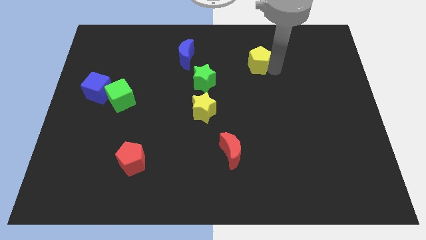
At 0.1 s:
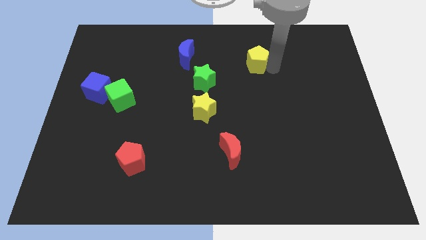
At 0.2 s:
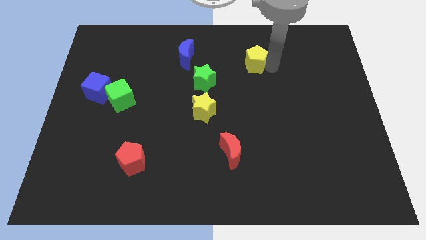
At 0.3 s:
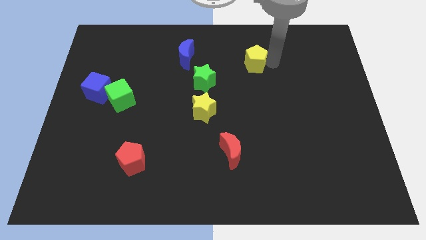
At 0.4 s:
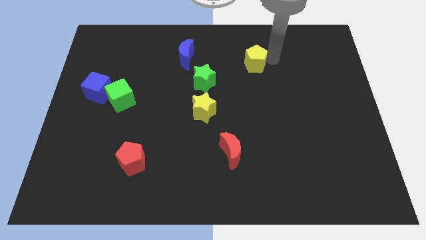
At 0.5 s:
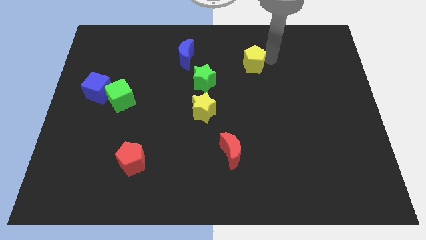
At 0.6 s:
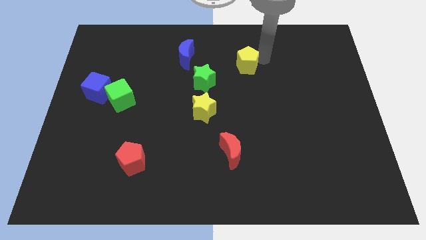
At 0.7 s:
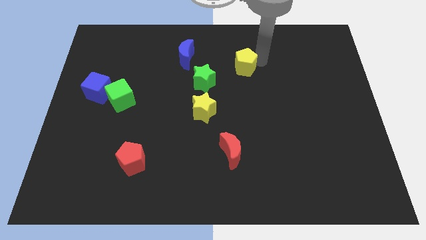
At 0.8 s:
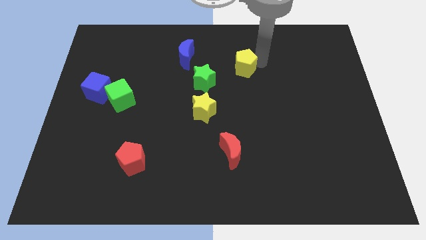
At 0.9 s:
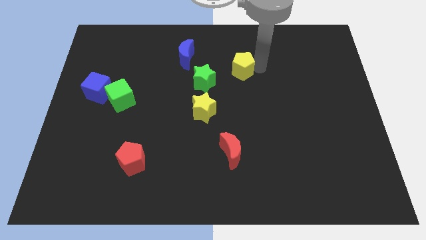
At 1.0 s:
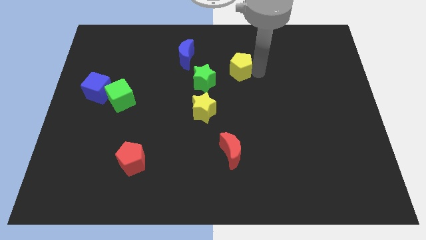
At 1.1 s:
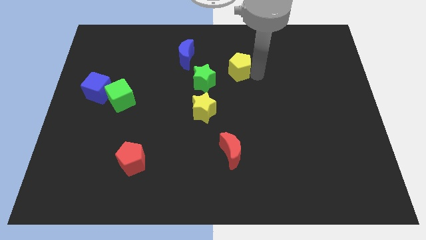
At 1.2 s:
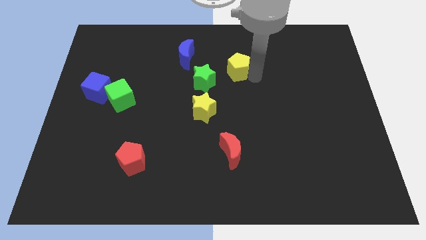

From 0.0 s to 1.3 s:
place yellow pentagon to the top right of green star

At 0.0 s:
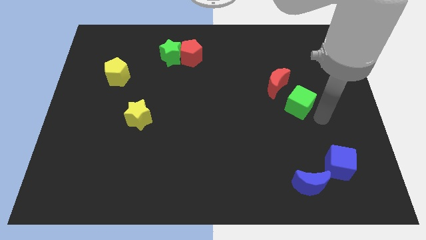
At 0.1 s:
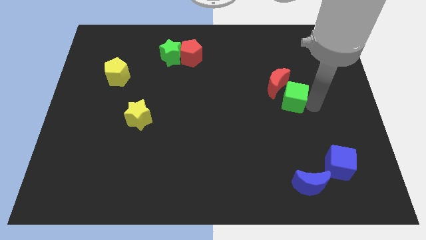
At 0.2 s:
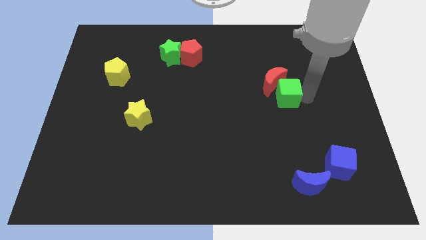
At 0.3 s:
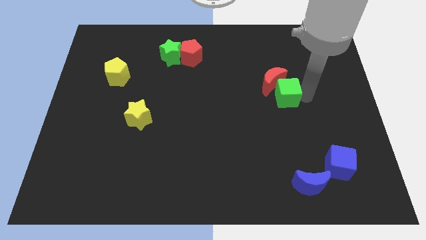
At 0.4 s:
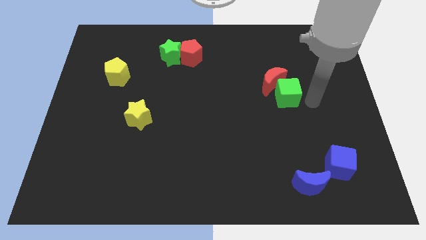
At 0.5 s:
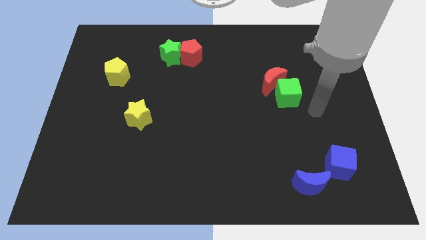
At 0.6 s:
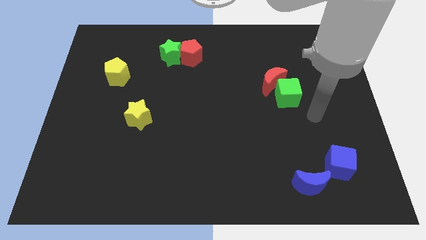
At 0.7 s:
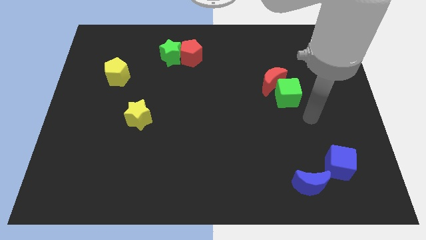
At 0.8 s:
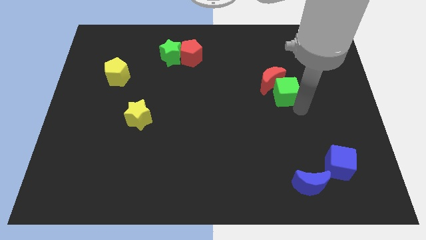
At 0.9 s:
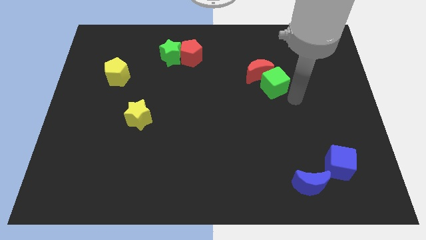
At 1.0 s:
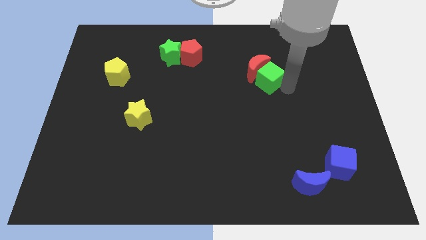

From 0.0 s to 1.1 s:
push the green cube into the red crescent

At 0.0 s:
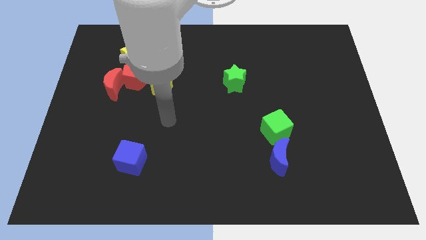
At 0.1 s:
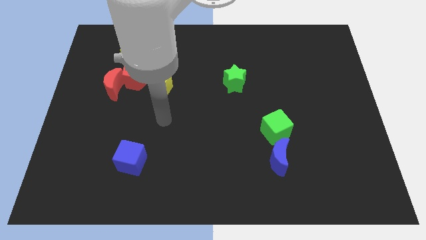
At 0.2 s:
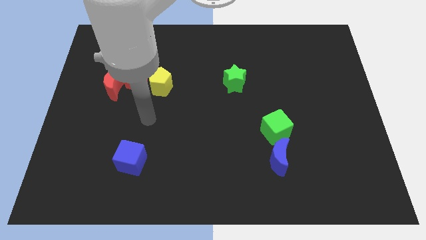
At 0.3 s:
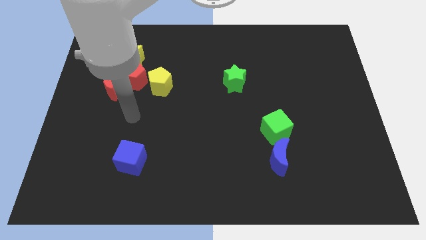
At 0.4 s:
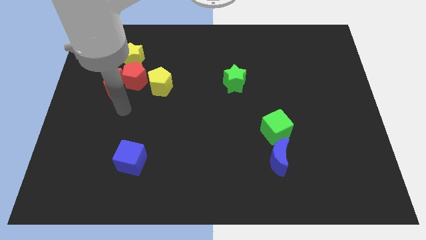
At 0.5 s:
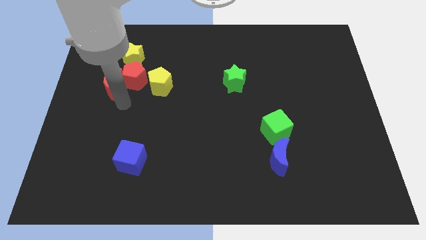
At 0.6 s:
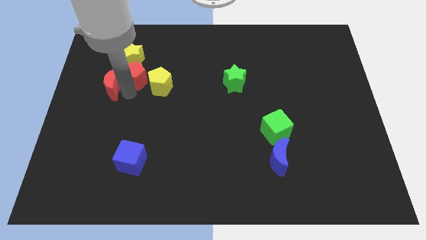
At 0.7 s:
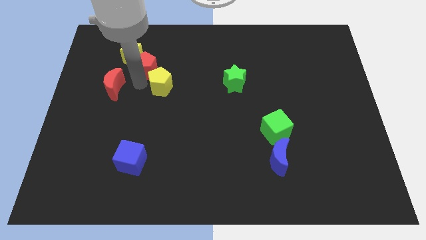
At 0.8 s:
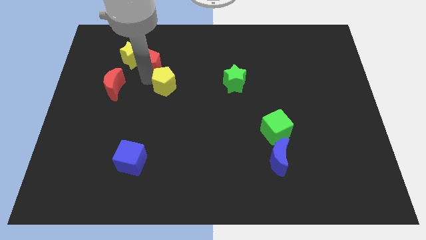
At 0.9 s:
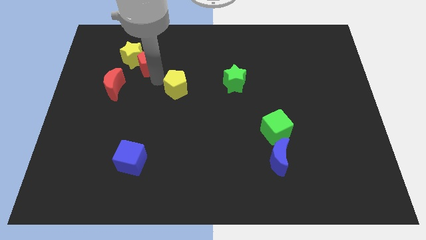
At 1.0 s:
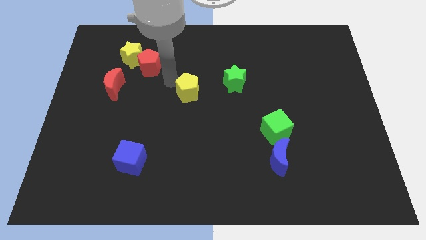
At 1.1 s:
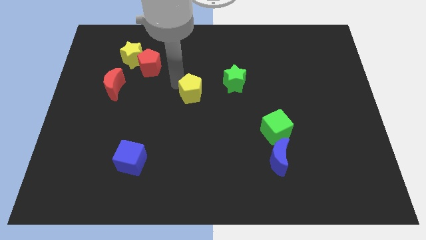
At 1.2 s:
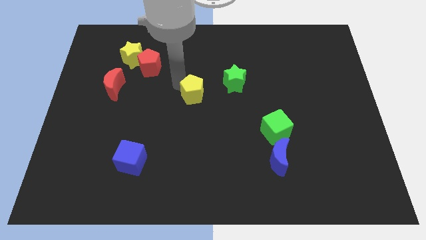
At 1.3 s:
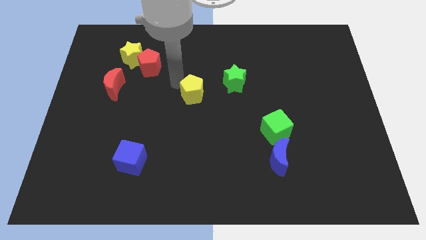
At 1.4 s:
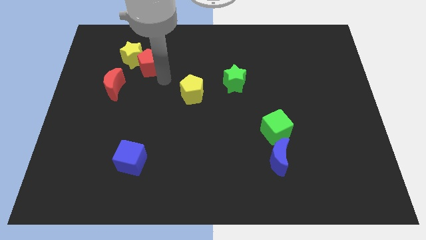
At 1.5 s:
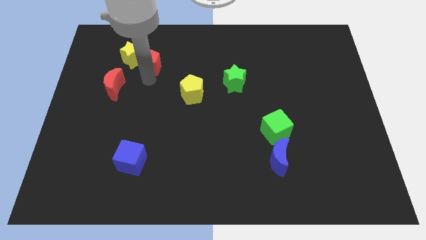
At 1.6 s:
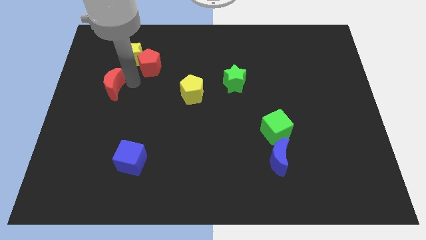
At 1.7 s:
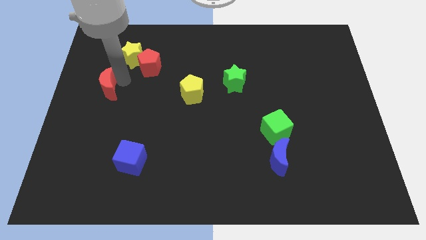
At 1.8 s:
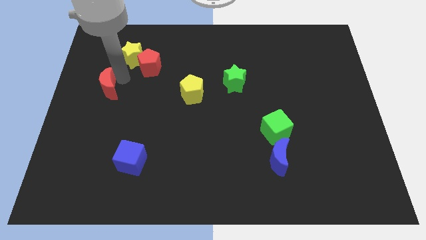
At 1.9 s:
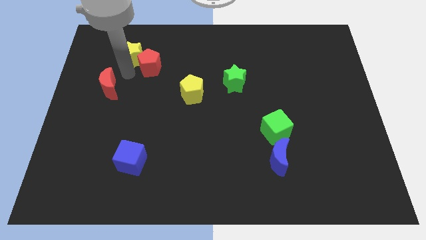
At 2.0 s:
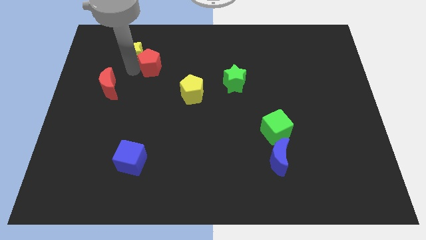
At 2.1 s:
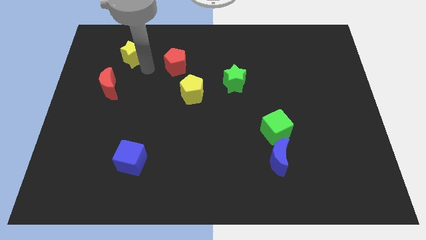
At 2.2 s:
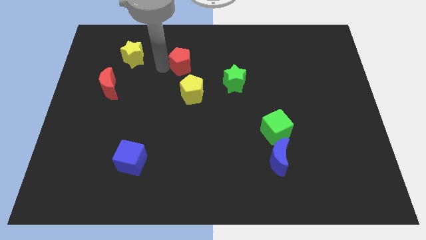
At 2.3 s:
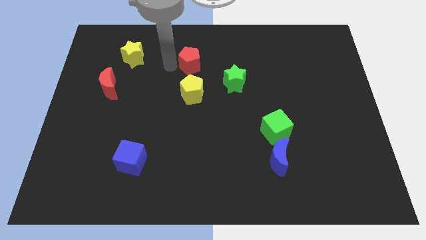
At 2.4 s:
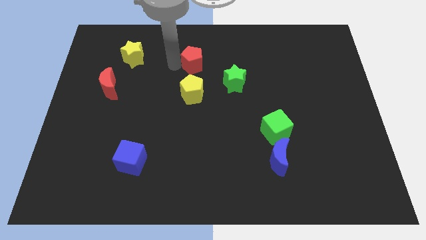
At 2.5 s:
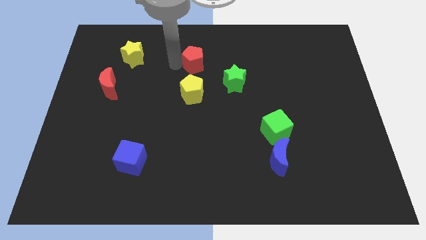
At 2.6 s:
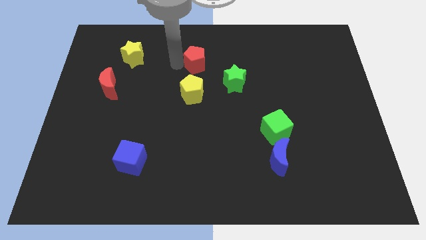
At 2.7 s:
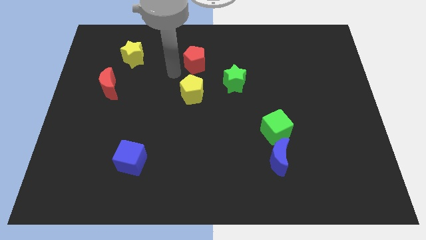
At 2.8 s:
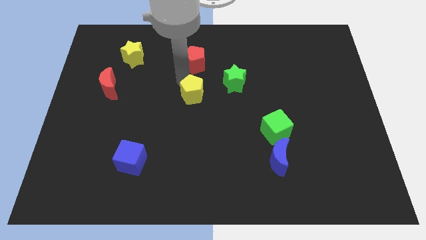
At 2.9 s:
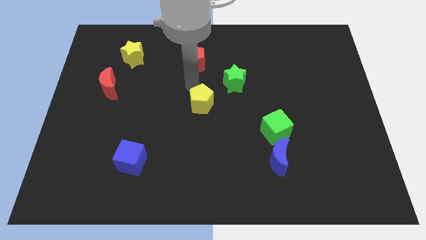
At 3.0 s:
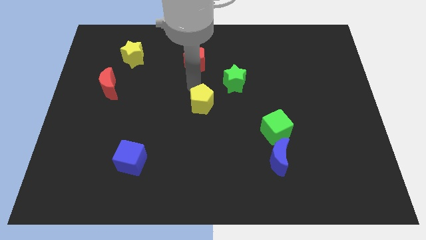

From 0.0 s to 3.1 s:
separate the red pentagon from the yellow pentagon

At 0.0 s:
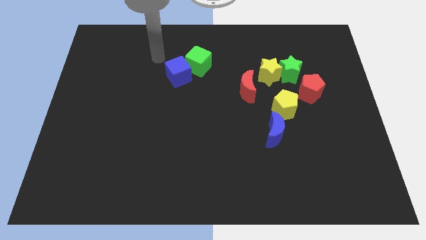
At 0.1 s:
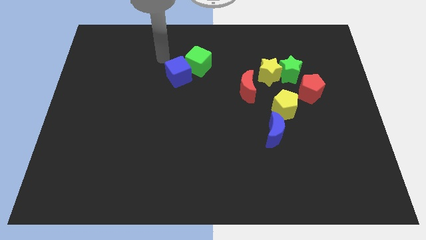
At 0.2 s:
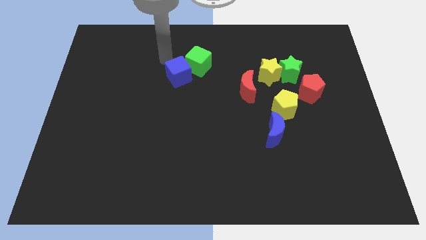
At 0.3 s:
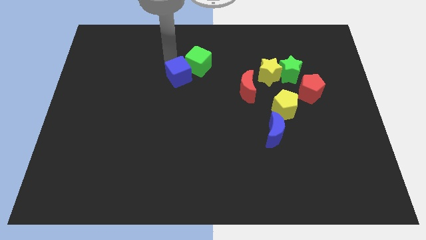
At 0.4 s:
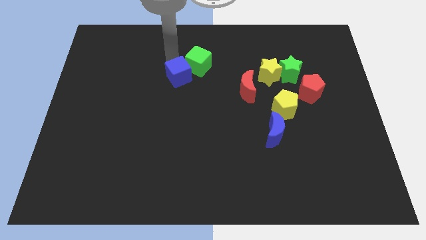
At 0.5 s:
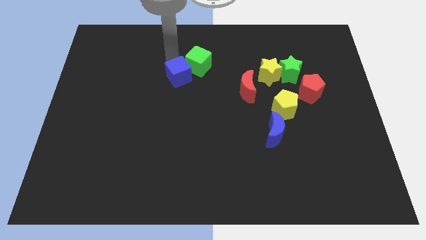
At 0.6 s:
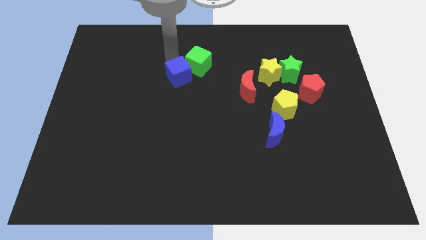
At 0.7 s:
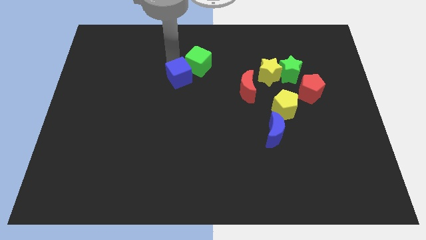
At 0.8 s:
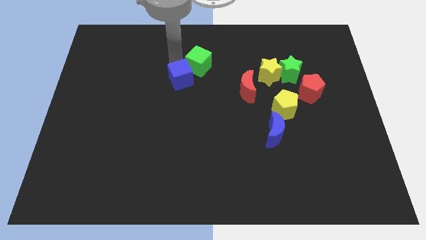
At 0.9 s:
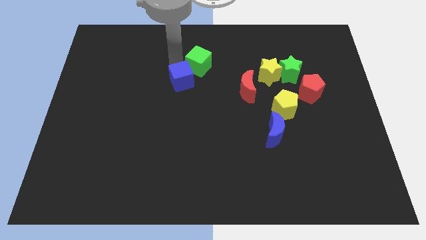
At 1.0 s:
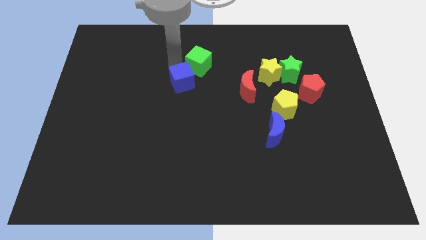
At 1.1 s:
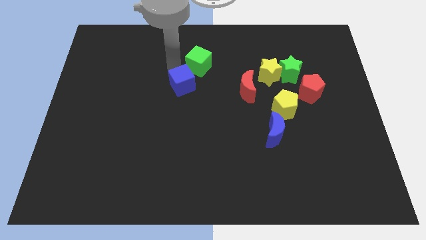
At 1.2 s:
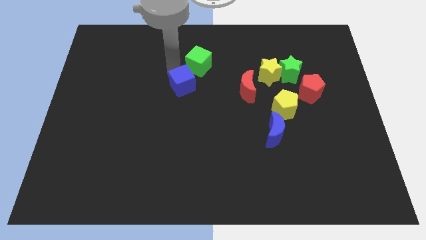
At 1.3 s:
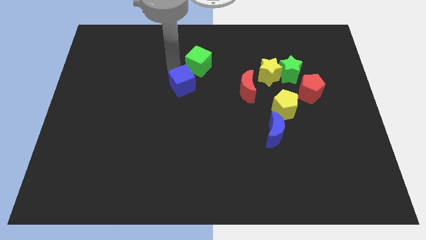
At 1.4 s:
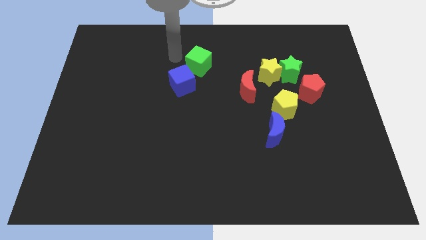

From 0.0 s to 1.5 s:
move blue cube slightly center of the board

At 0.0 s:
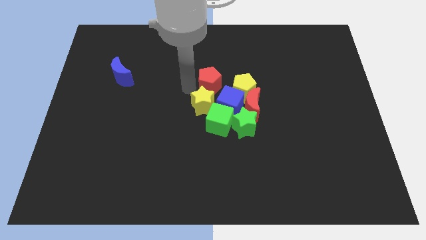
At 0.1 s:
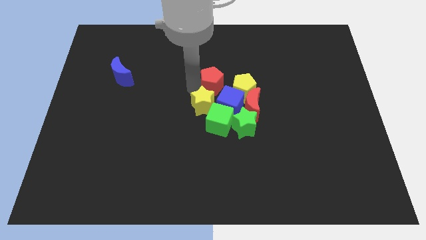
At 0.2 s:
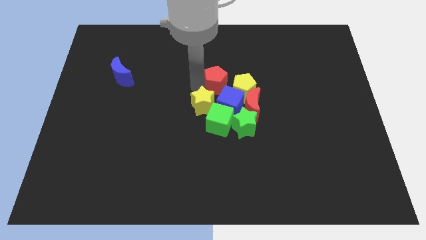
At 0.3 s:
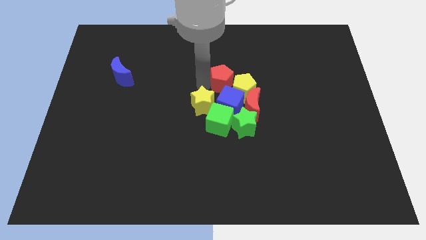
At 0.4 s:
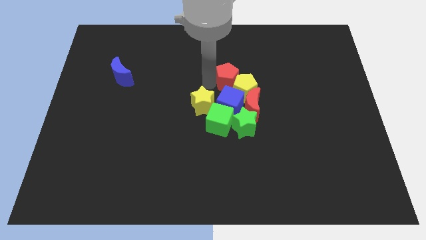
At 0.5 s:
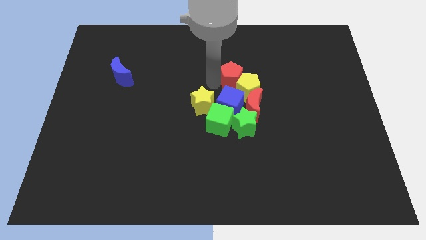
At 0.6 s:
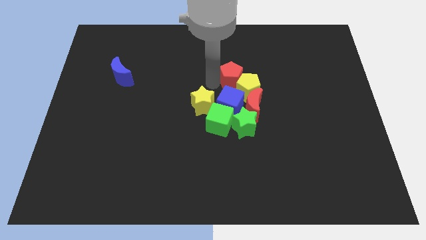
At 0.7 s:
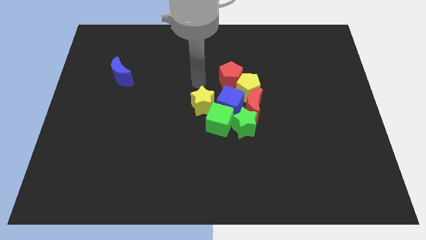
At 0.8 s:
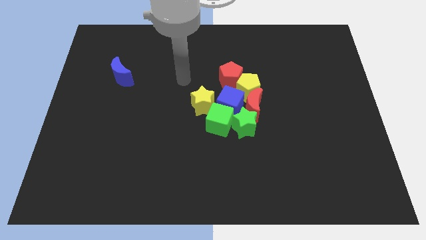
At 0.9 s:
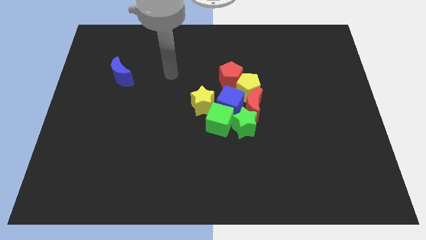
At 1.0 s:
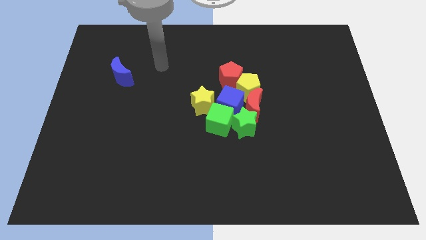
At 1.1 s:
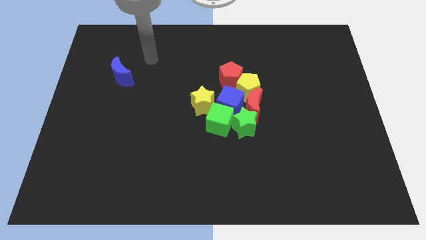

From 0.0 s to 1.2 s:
drag red pentagon slightly right side to the center of the board

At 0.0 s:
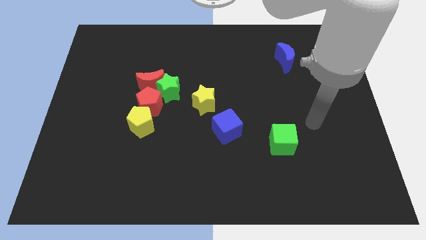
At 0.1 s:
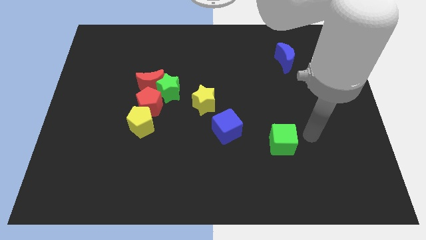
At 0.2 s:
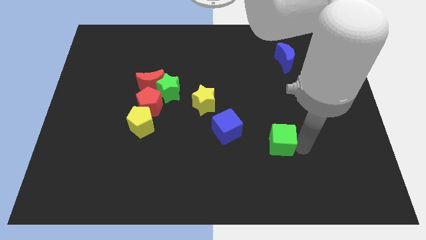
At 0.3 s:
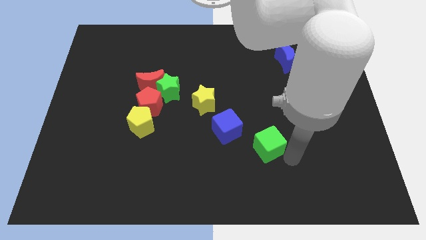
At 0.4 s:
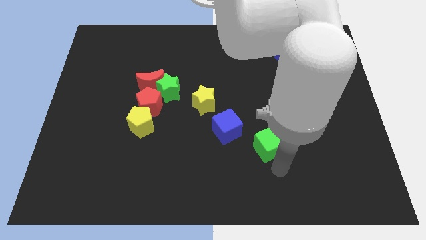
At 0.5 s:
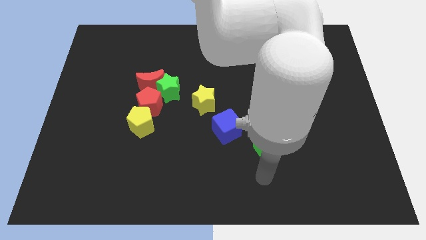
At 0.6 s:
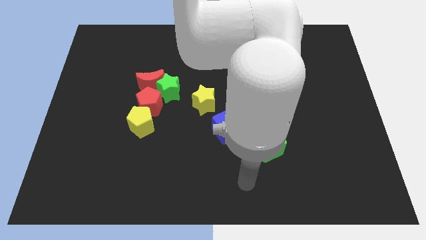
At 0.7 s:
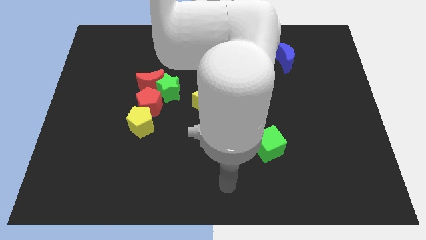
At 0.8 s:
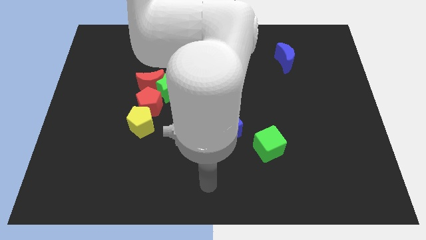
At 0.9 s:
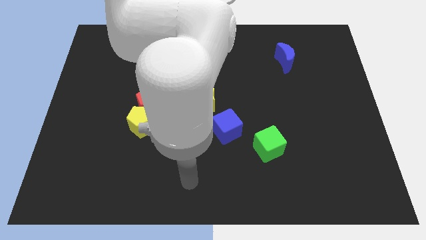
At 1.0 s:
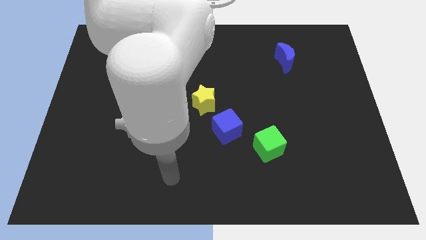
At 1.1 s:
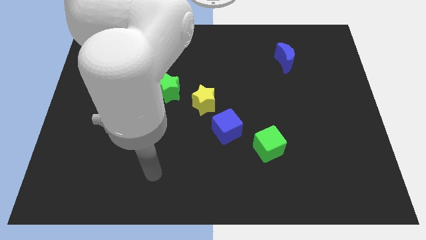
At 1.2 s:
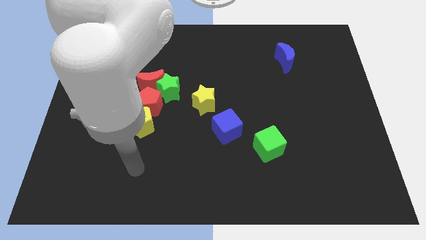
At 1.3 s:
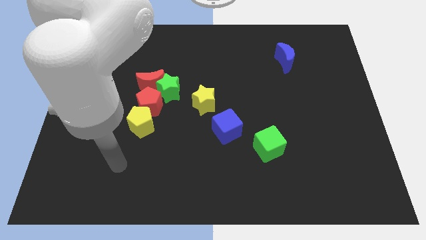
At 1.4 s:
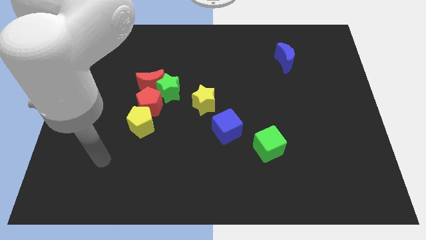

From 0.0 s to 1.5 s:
place the green cube diagonally to blue cube
